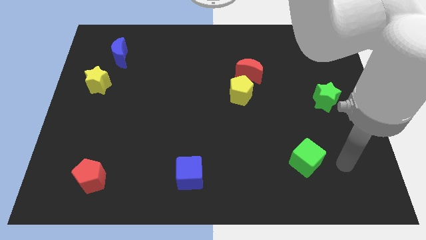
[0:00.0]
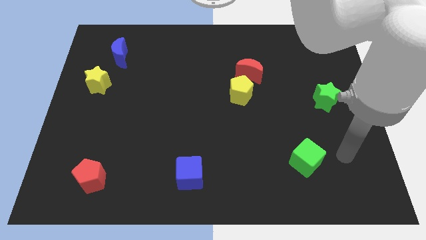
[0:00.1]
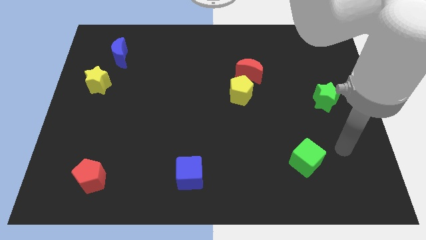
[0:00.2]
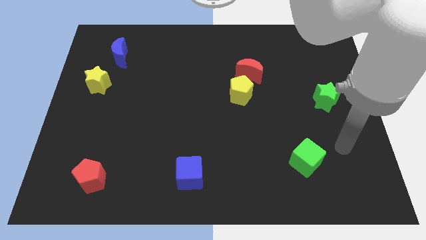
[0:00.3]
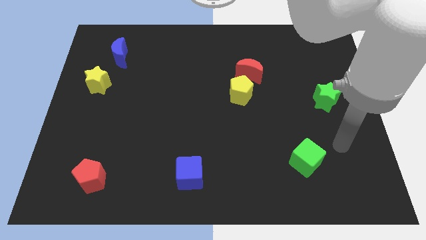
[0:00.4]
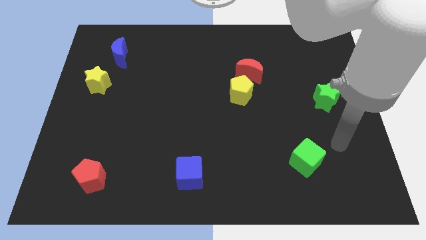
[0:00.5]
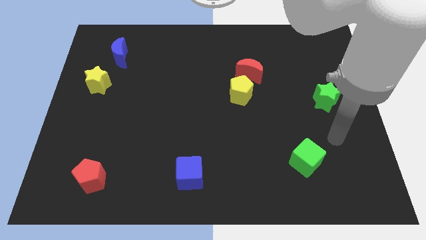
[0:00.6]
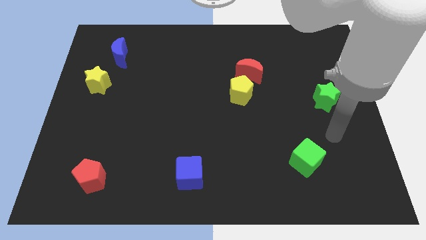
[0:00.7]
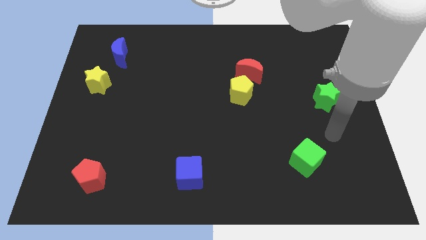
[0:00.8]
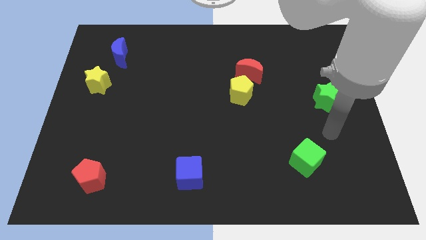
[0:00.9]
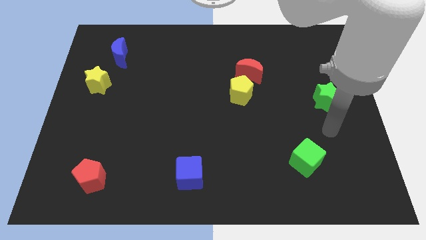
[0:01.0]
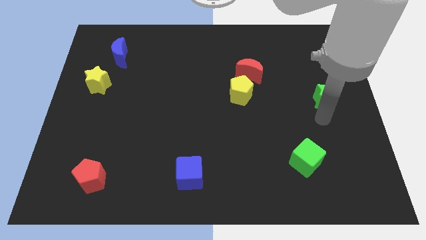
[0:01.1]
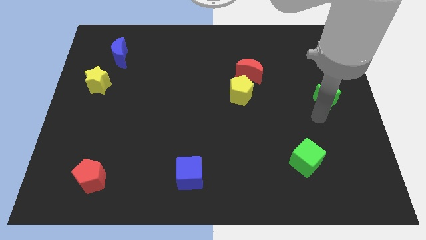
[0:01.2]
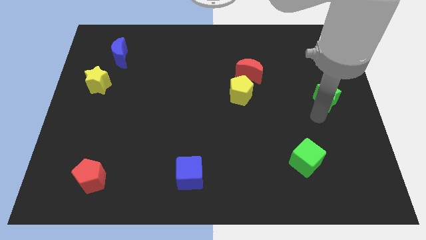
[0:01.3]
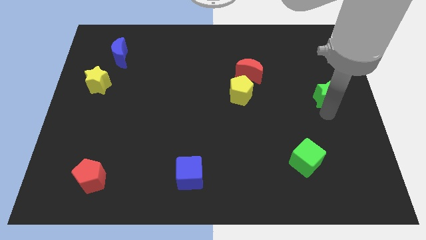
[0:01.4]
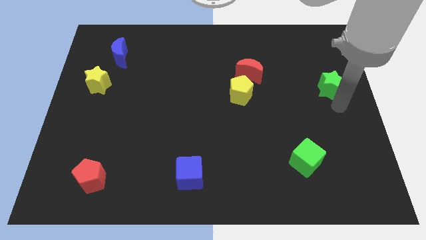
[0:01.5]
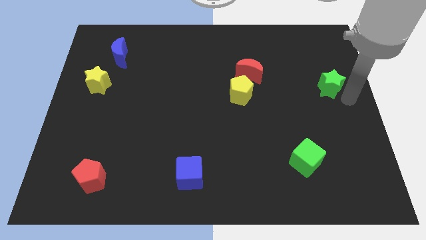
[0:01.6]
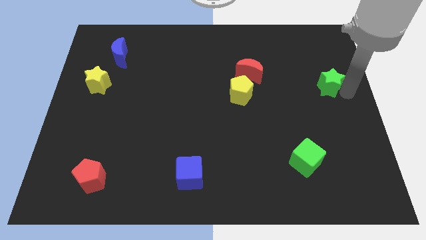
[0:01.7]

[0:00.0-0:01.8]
push the green star towards top

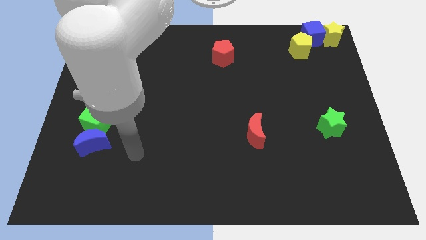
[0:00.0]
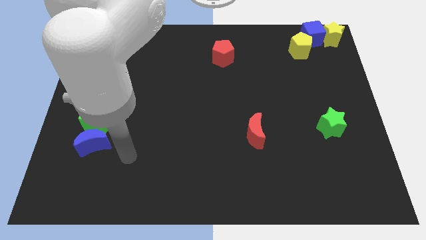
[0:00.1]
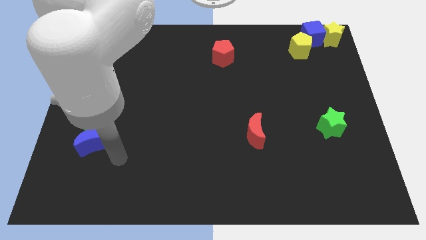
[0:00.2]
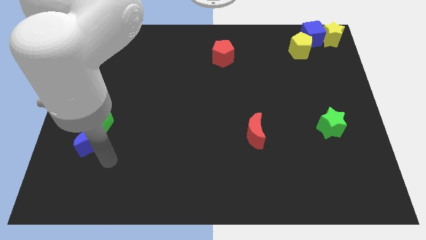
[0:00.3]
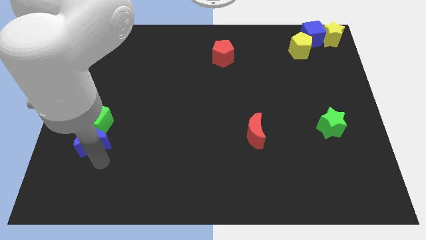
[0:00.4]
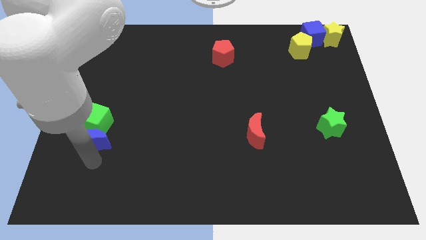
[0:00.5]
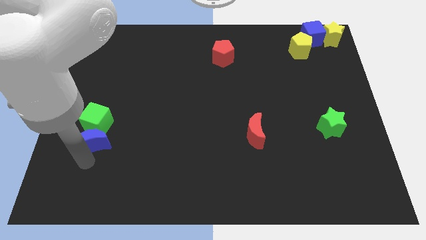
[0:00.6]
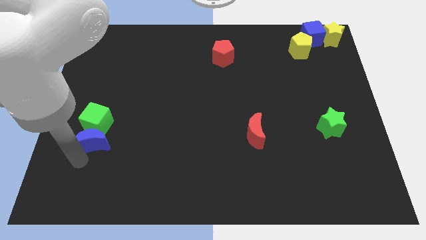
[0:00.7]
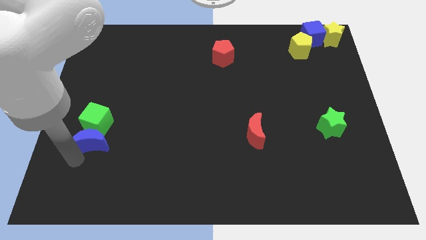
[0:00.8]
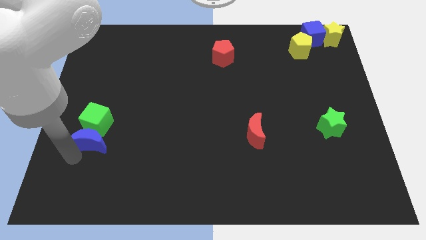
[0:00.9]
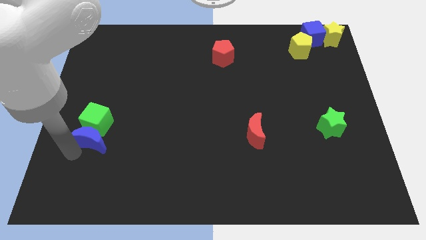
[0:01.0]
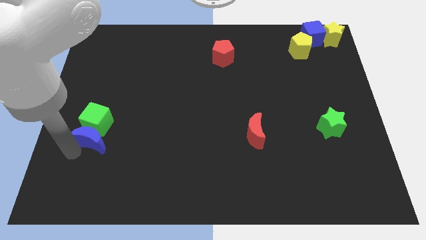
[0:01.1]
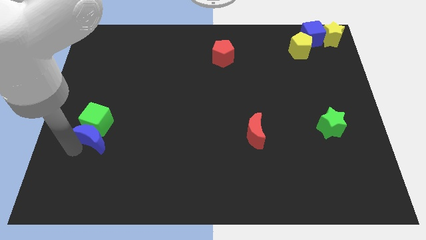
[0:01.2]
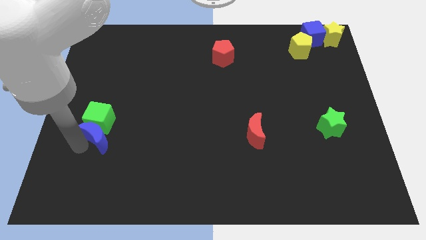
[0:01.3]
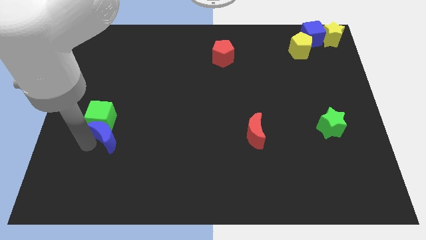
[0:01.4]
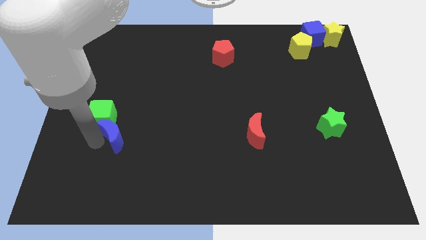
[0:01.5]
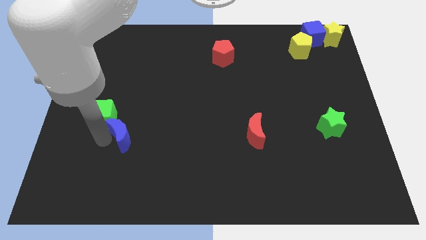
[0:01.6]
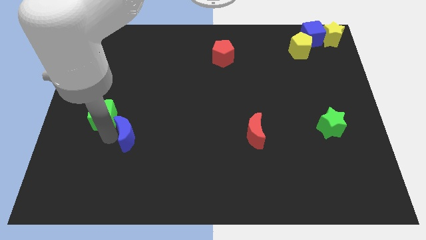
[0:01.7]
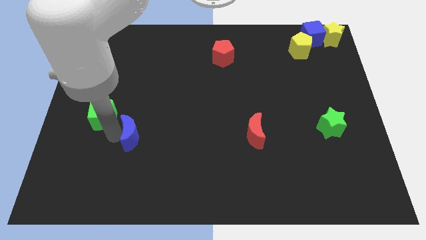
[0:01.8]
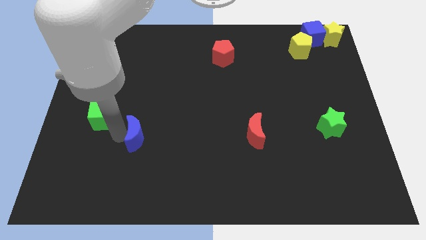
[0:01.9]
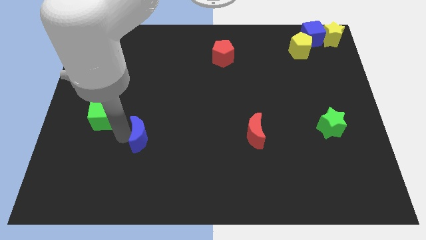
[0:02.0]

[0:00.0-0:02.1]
push the blue crescent away from the green cube

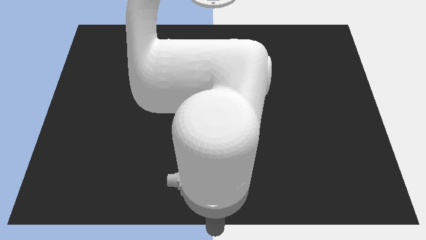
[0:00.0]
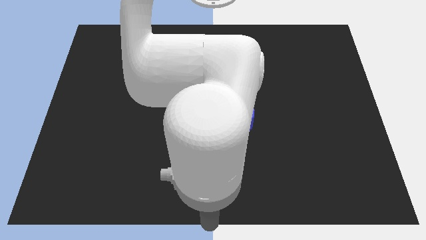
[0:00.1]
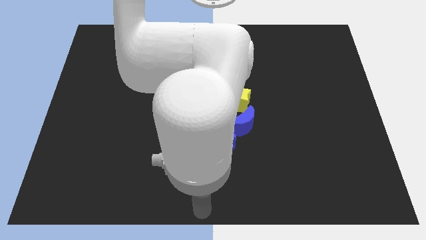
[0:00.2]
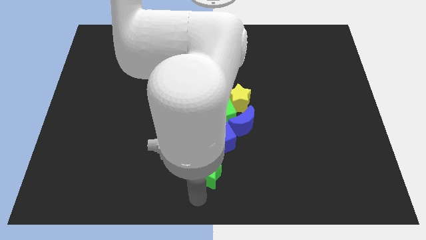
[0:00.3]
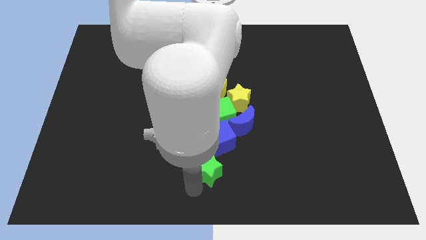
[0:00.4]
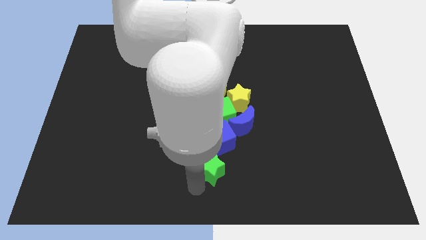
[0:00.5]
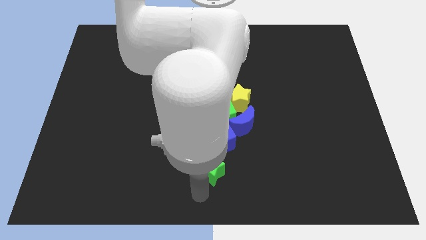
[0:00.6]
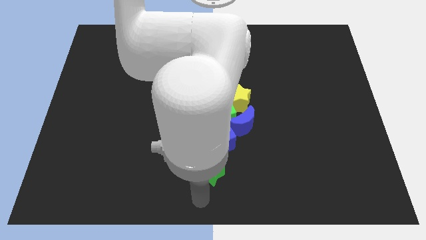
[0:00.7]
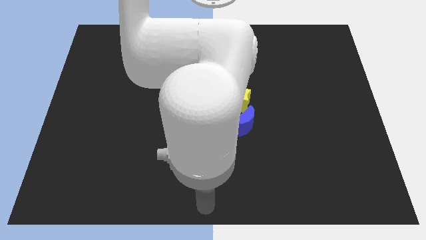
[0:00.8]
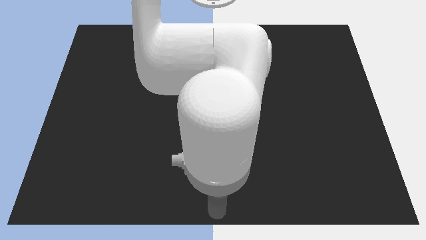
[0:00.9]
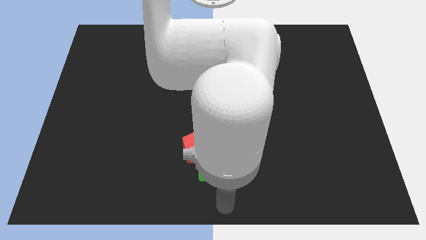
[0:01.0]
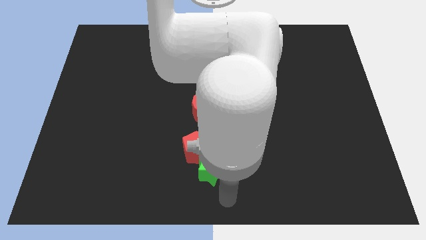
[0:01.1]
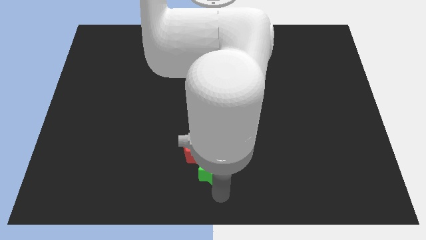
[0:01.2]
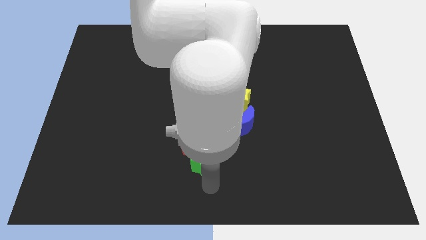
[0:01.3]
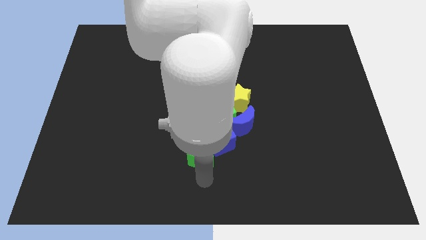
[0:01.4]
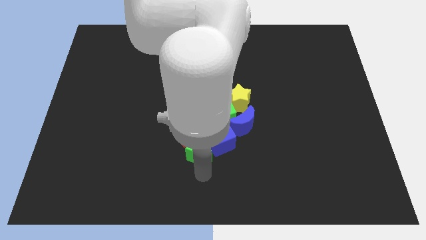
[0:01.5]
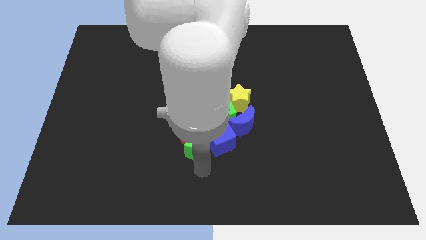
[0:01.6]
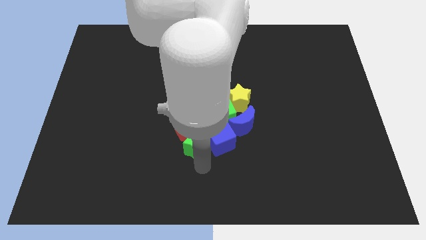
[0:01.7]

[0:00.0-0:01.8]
move the green star on the left side of the blue cube

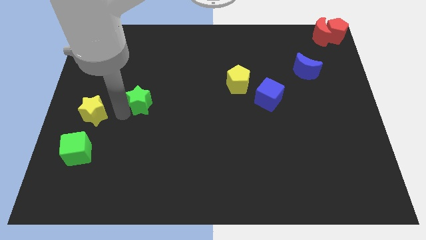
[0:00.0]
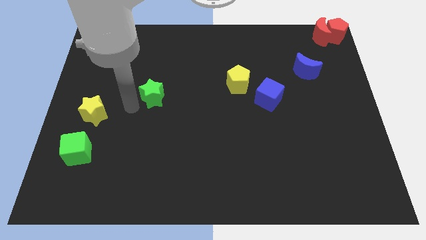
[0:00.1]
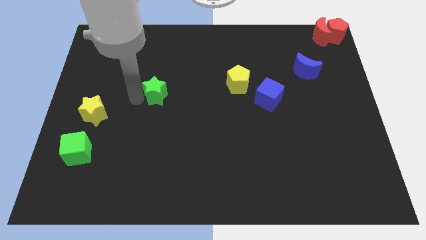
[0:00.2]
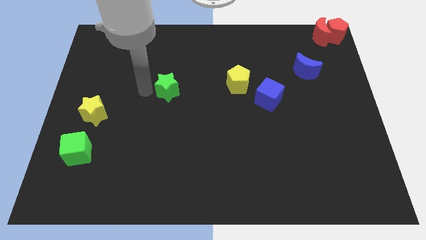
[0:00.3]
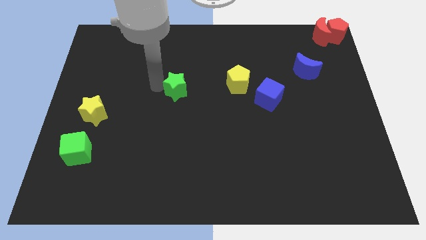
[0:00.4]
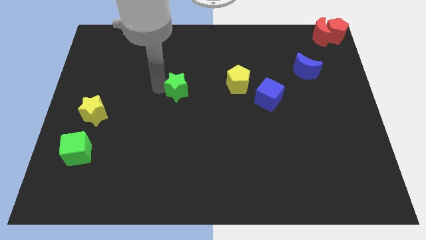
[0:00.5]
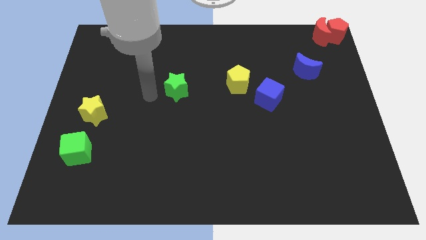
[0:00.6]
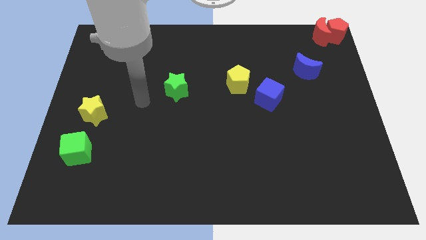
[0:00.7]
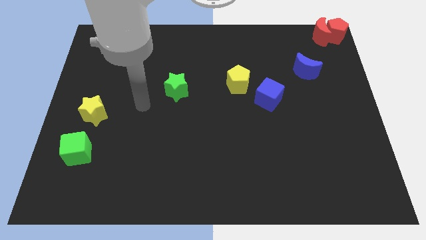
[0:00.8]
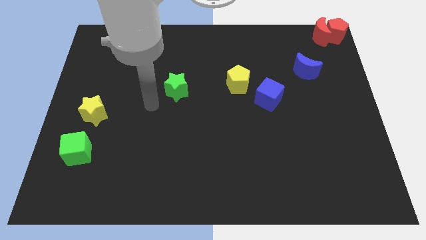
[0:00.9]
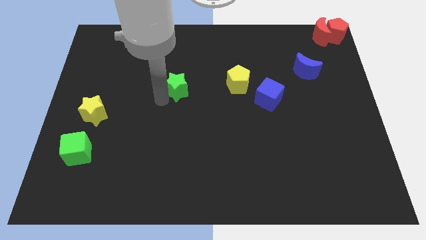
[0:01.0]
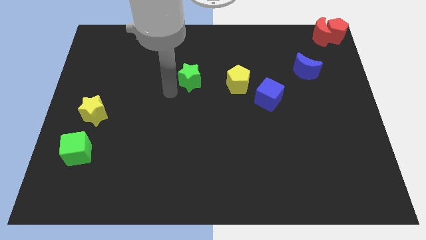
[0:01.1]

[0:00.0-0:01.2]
push the green star left to the yellow pentagon

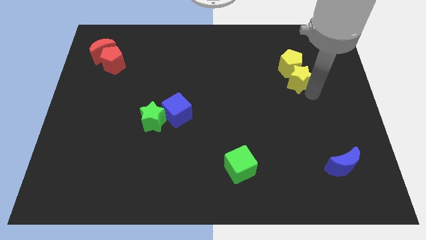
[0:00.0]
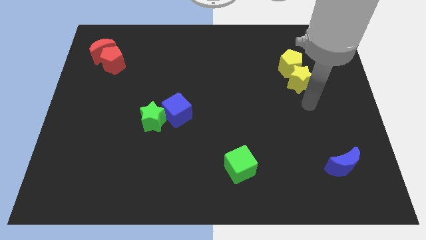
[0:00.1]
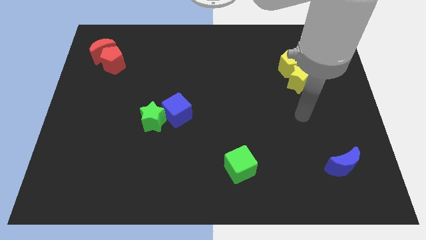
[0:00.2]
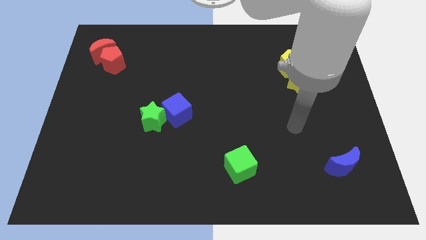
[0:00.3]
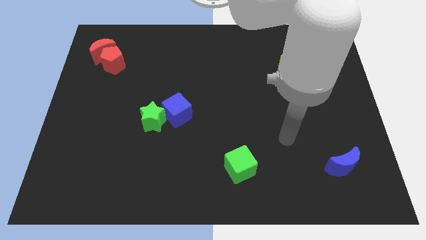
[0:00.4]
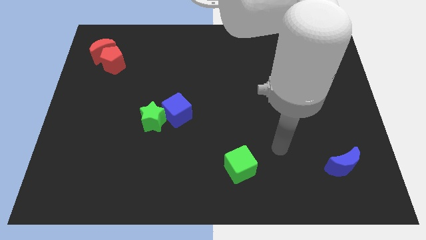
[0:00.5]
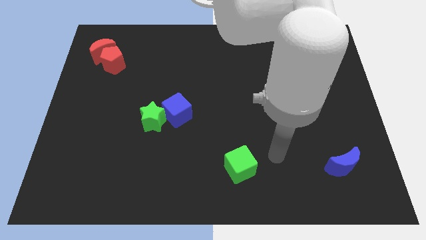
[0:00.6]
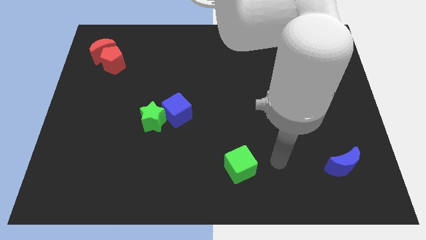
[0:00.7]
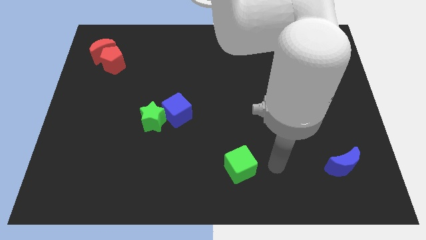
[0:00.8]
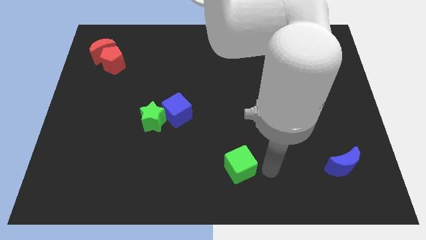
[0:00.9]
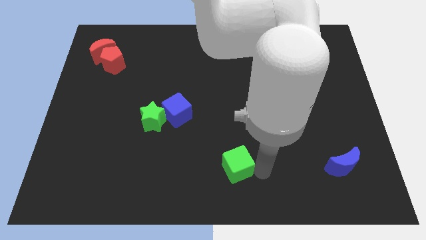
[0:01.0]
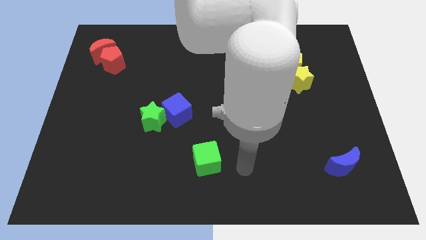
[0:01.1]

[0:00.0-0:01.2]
touch your arm to the green cube

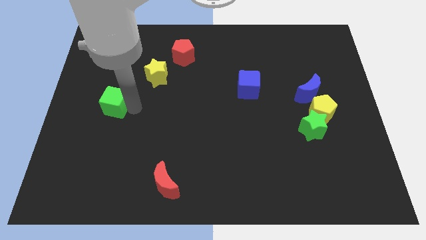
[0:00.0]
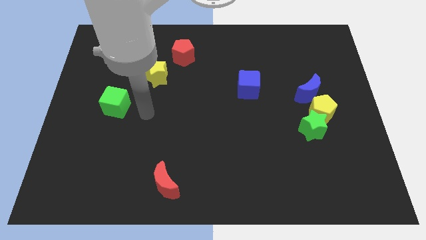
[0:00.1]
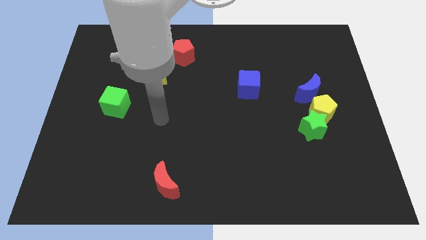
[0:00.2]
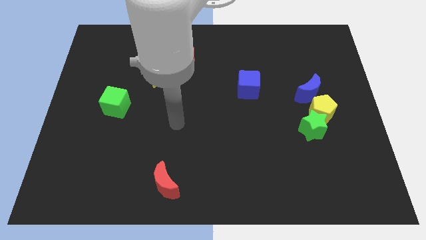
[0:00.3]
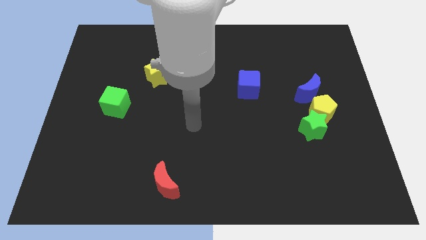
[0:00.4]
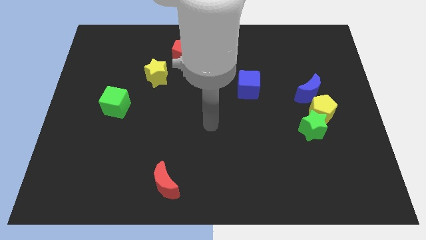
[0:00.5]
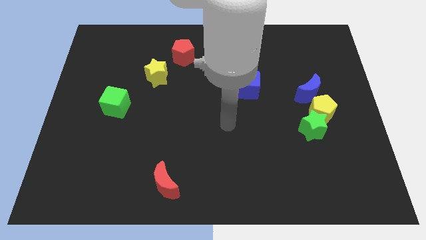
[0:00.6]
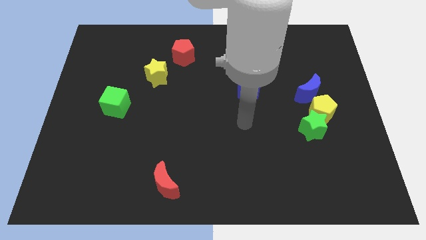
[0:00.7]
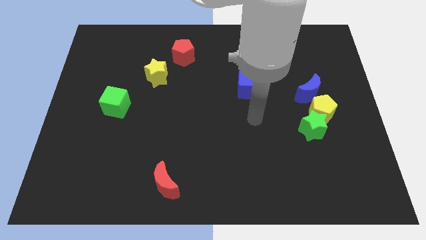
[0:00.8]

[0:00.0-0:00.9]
put your arm vertically below the blue cube
